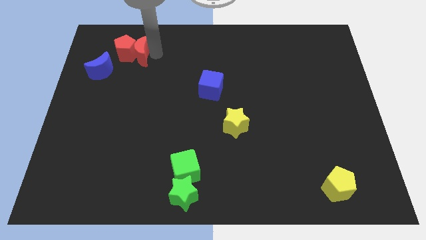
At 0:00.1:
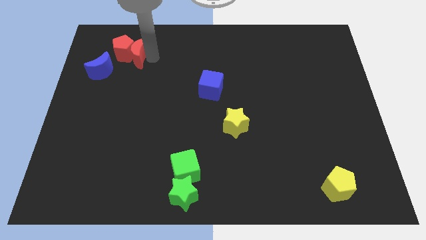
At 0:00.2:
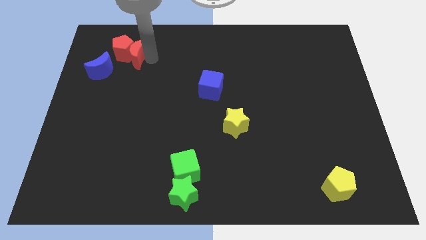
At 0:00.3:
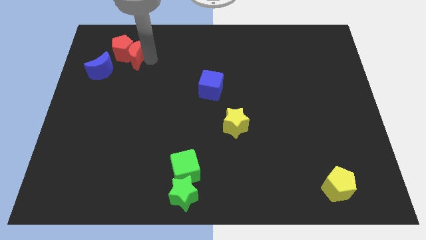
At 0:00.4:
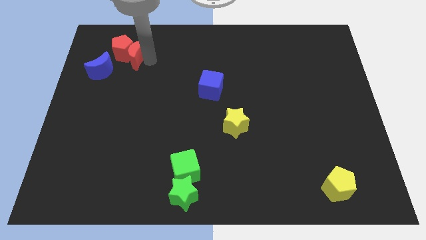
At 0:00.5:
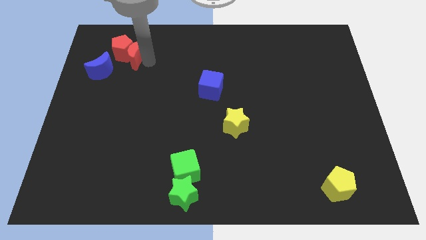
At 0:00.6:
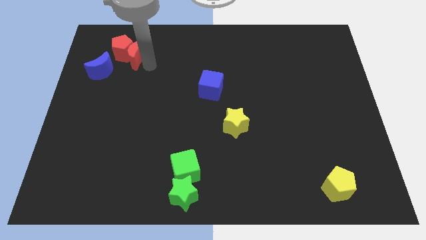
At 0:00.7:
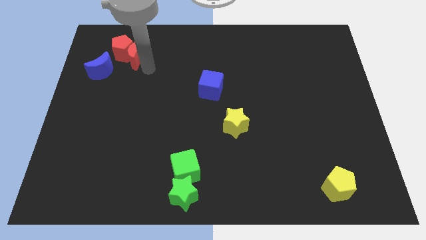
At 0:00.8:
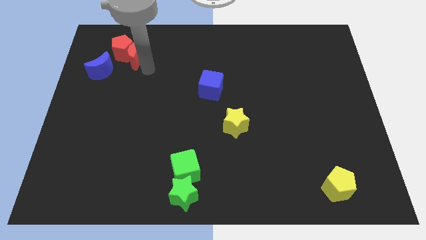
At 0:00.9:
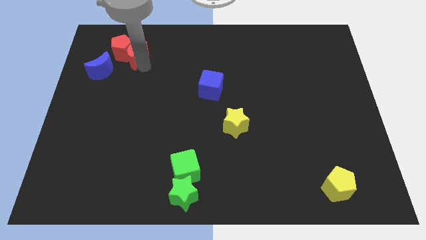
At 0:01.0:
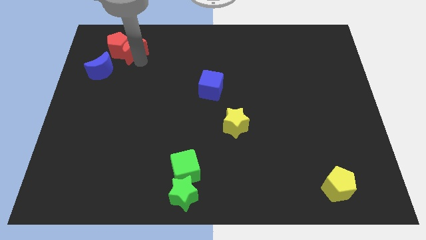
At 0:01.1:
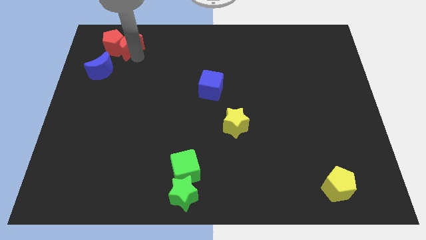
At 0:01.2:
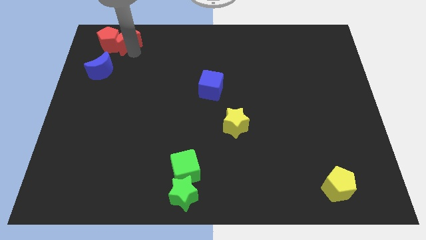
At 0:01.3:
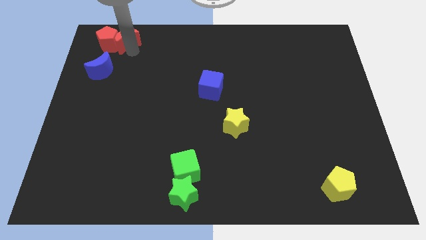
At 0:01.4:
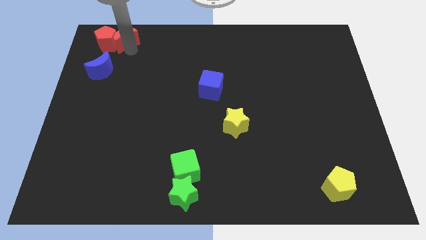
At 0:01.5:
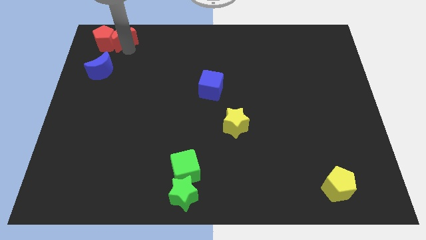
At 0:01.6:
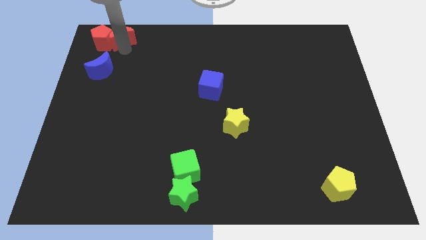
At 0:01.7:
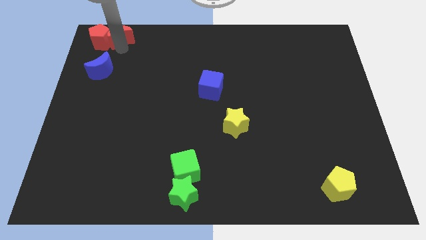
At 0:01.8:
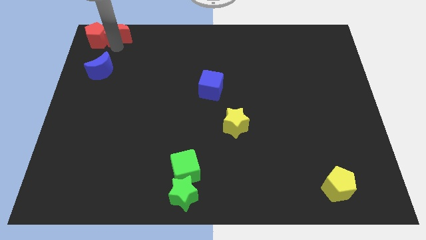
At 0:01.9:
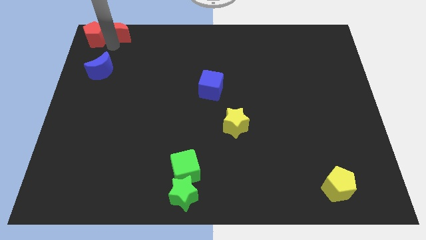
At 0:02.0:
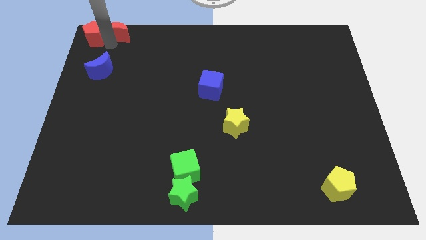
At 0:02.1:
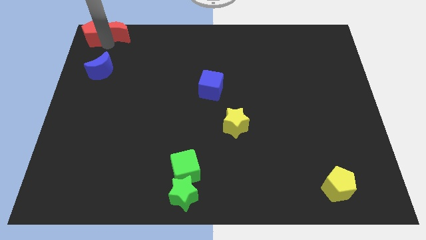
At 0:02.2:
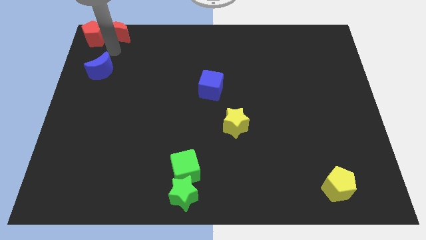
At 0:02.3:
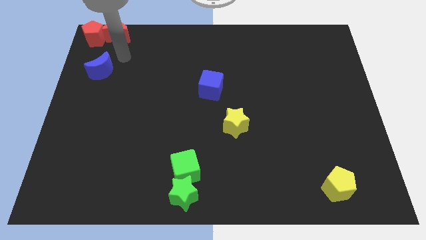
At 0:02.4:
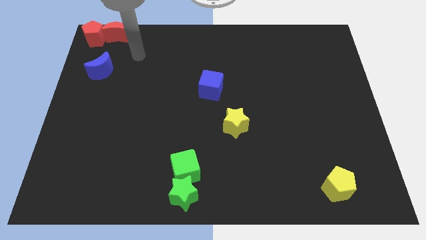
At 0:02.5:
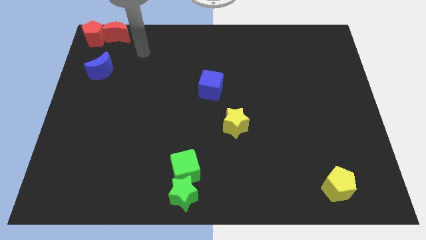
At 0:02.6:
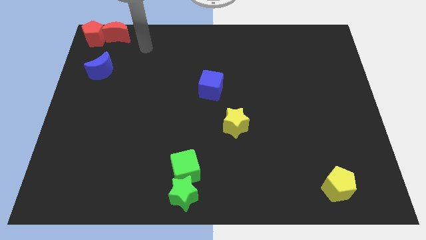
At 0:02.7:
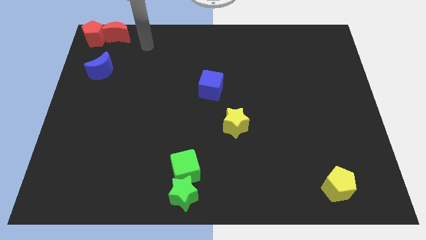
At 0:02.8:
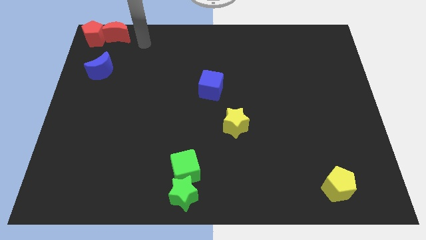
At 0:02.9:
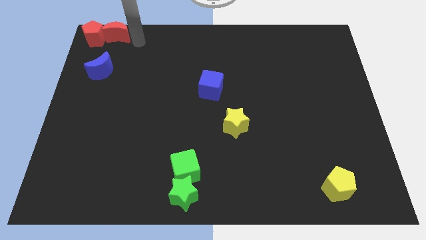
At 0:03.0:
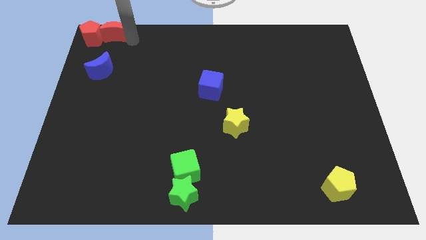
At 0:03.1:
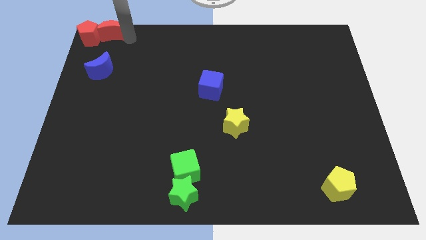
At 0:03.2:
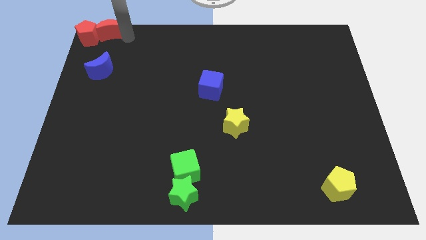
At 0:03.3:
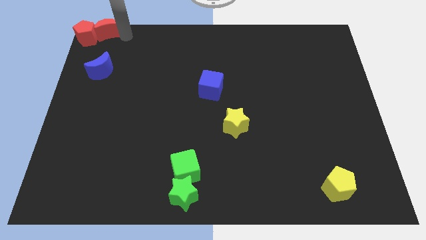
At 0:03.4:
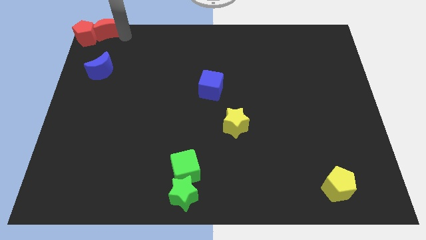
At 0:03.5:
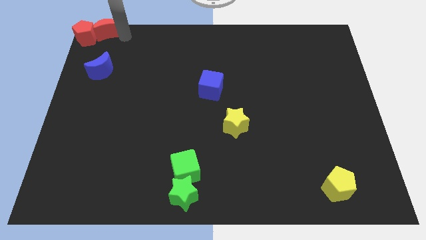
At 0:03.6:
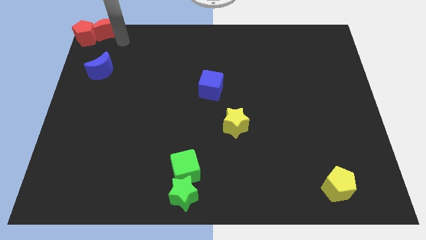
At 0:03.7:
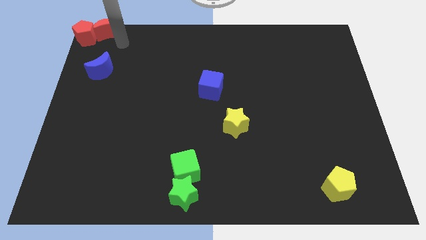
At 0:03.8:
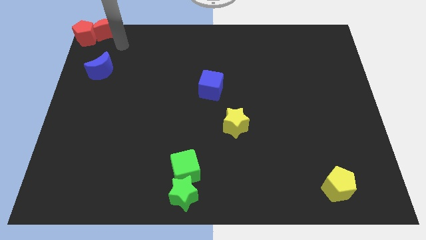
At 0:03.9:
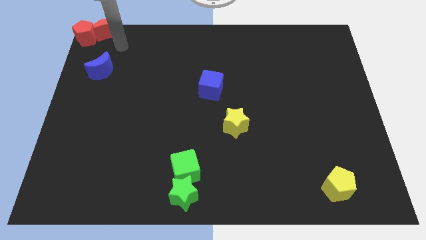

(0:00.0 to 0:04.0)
push the red blocks to the top left corner

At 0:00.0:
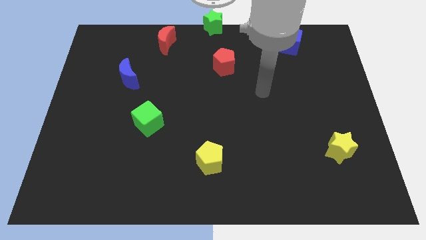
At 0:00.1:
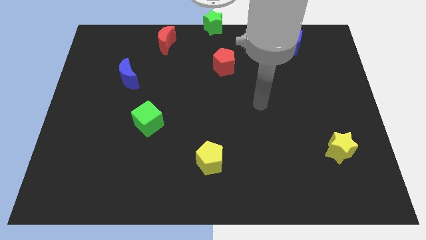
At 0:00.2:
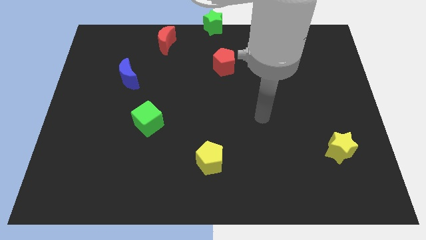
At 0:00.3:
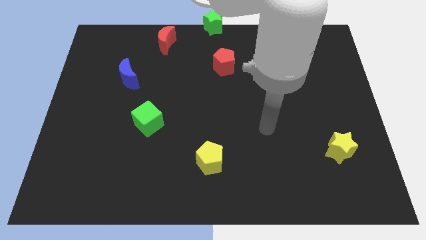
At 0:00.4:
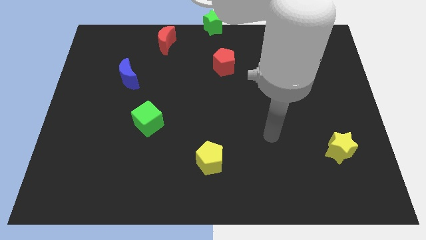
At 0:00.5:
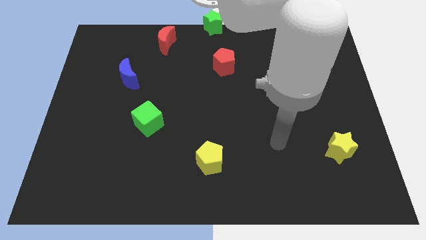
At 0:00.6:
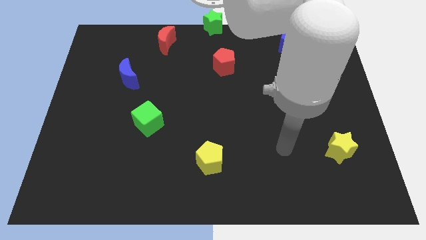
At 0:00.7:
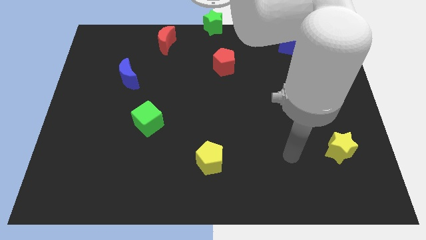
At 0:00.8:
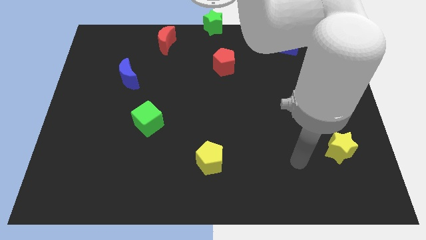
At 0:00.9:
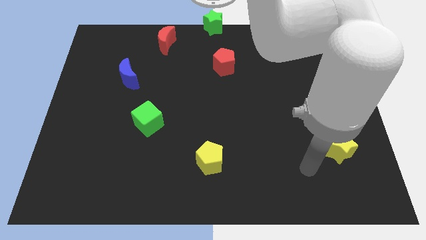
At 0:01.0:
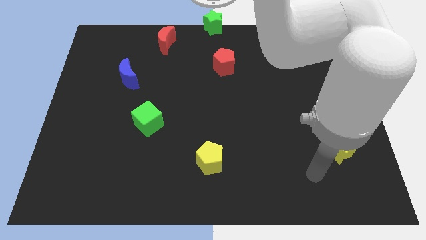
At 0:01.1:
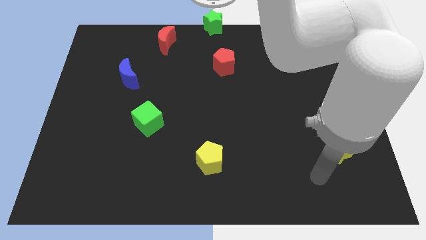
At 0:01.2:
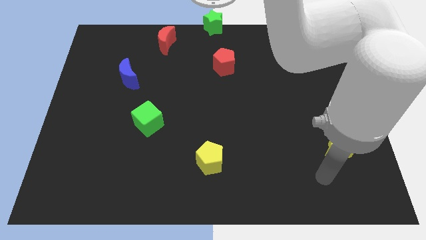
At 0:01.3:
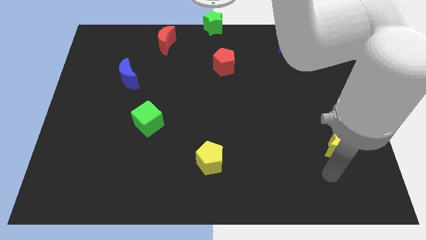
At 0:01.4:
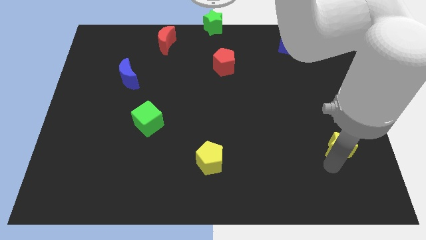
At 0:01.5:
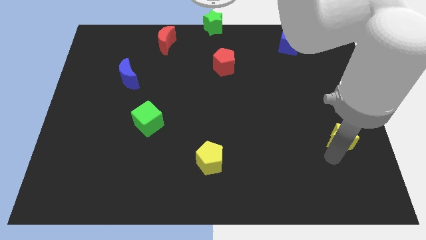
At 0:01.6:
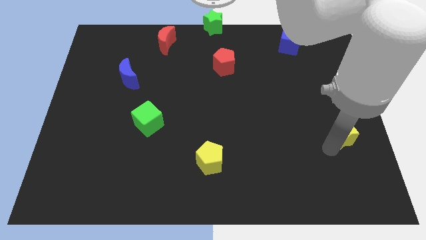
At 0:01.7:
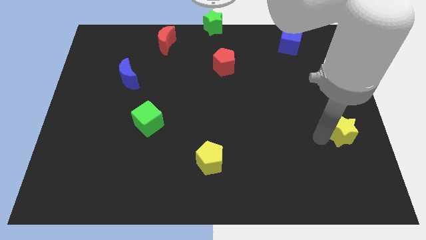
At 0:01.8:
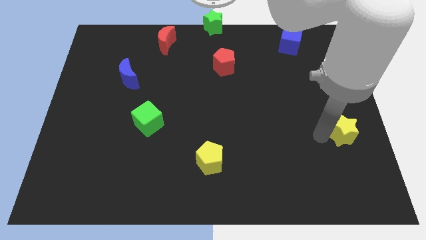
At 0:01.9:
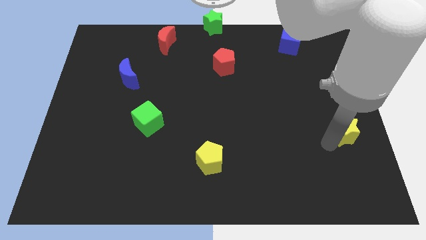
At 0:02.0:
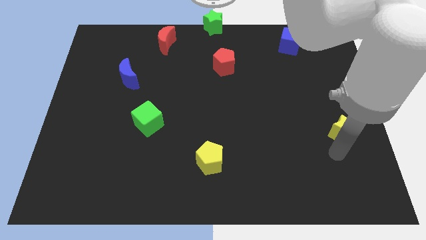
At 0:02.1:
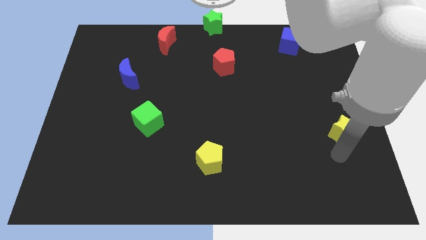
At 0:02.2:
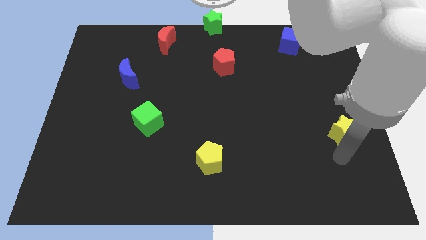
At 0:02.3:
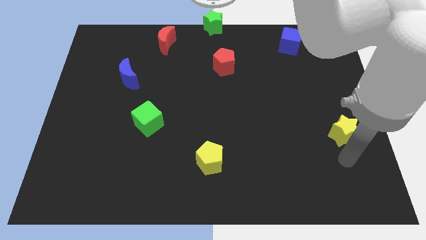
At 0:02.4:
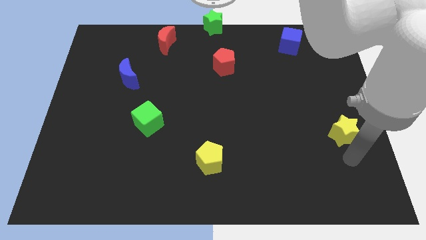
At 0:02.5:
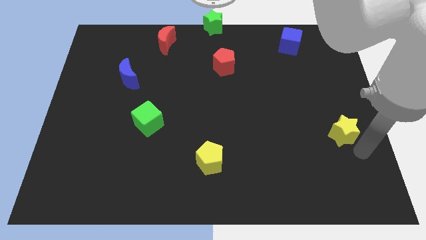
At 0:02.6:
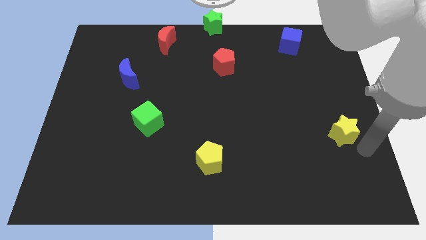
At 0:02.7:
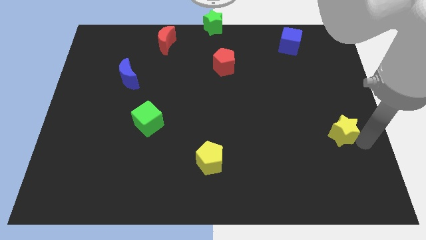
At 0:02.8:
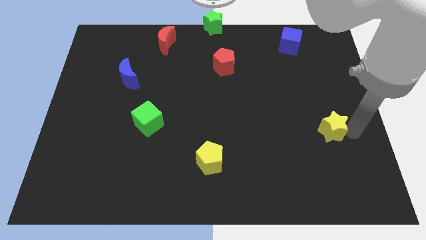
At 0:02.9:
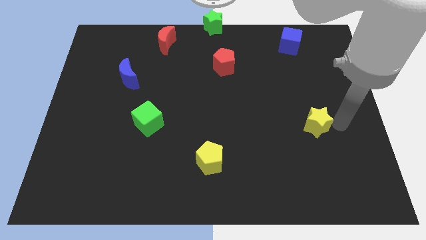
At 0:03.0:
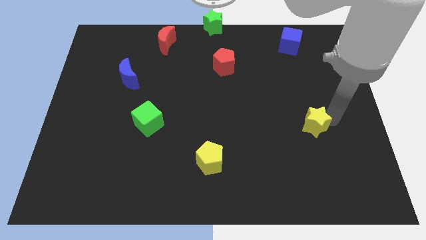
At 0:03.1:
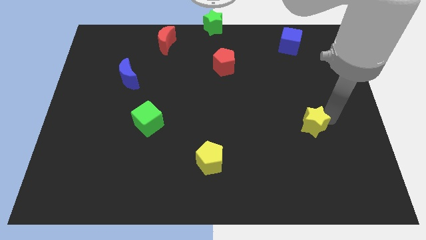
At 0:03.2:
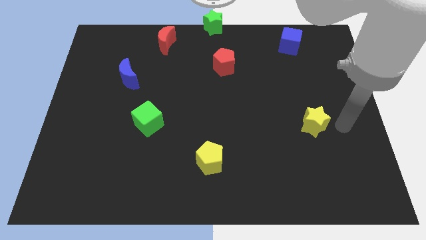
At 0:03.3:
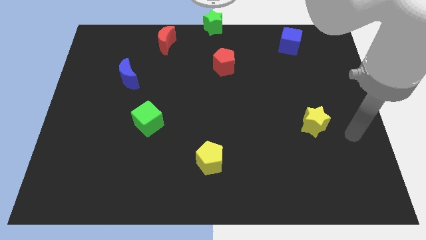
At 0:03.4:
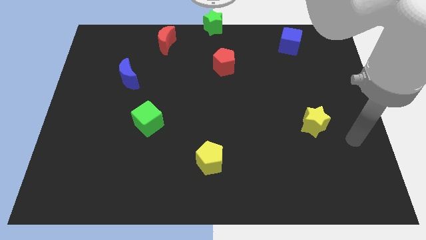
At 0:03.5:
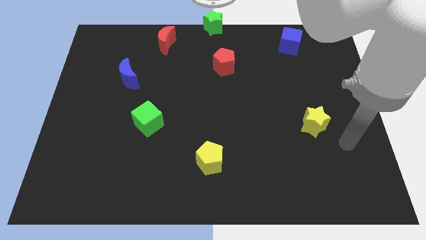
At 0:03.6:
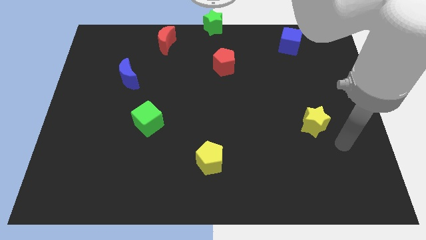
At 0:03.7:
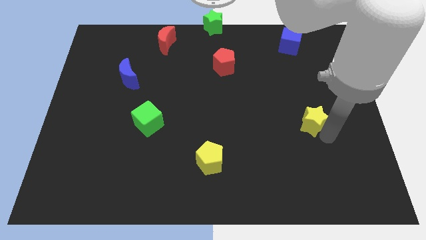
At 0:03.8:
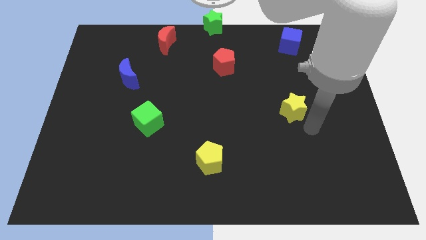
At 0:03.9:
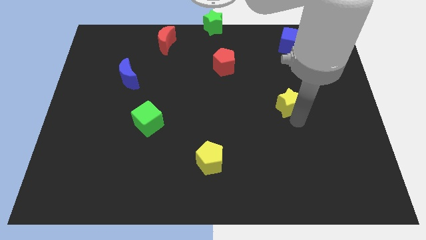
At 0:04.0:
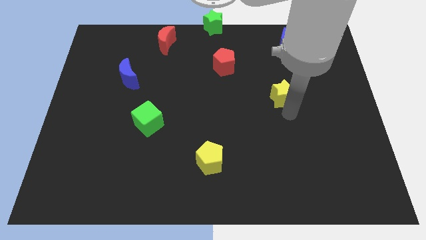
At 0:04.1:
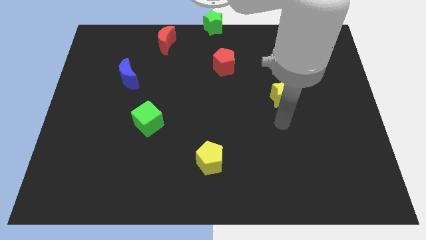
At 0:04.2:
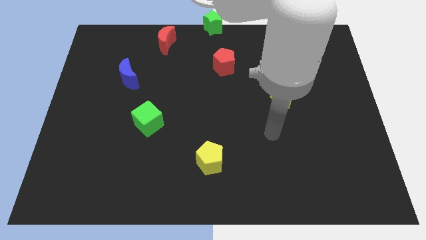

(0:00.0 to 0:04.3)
put the yellow star underneath the blue cube

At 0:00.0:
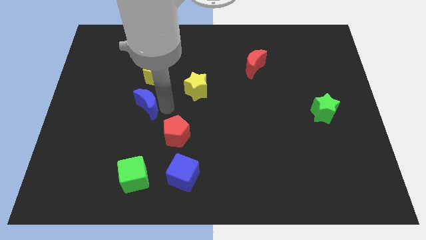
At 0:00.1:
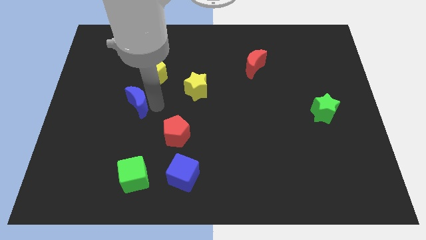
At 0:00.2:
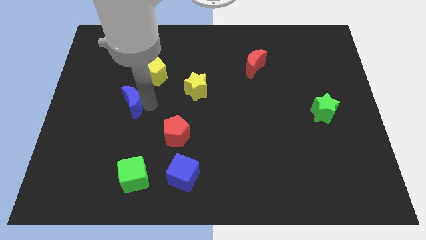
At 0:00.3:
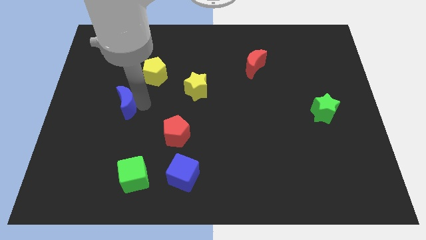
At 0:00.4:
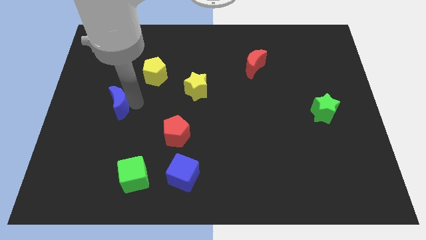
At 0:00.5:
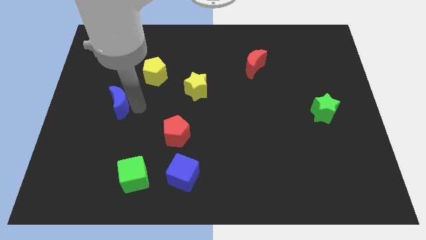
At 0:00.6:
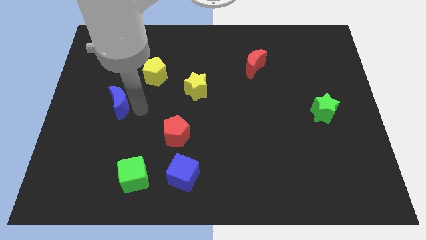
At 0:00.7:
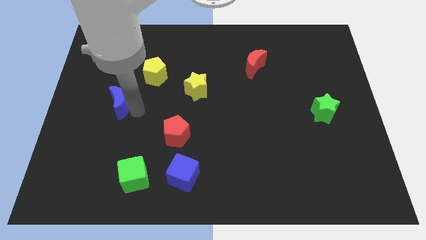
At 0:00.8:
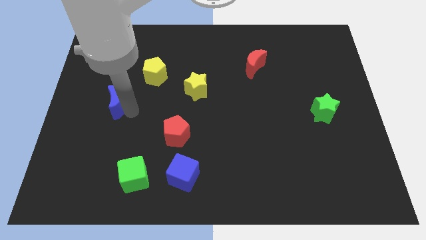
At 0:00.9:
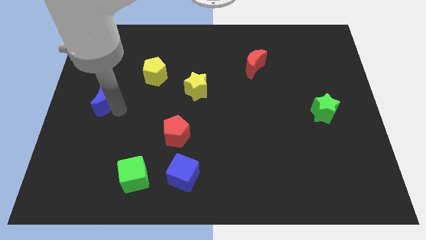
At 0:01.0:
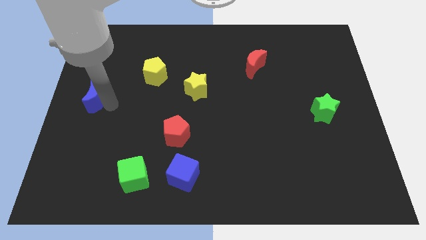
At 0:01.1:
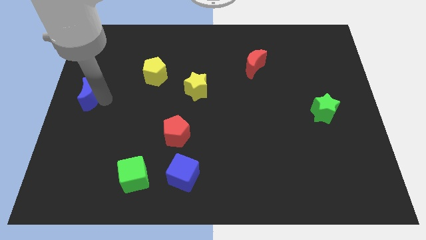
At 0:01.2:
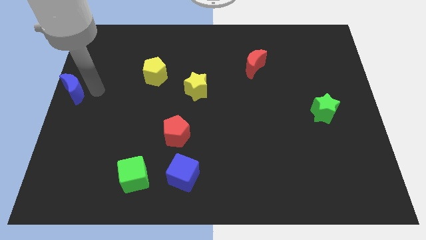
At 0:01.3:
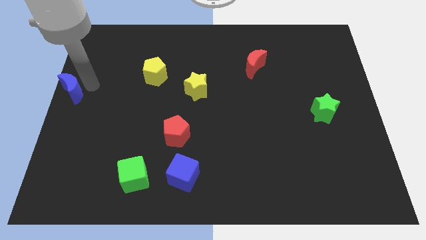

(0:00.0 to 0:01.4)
move blue moon to the left center
